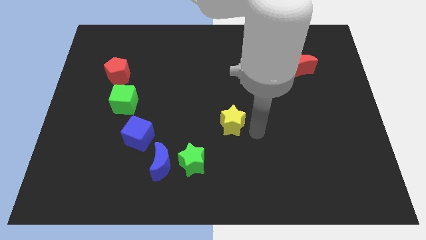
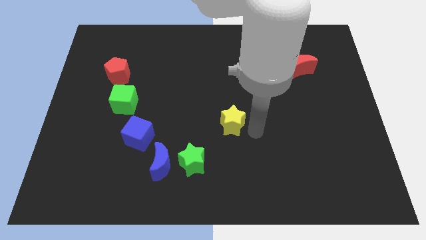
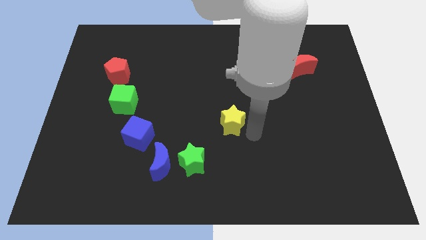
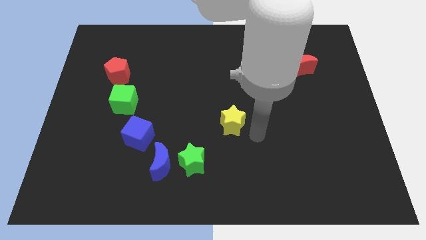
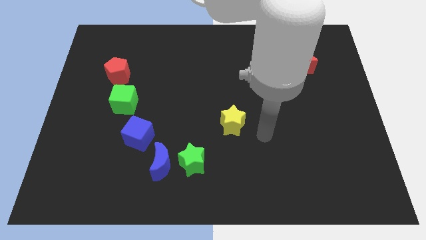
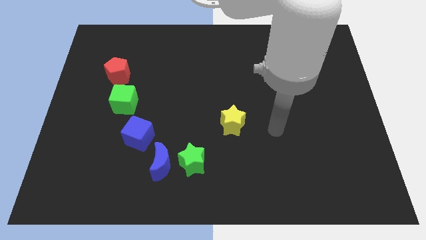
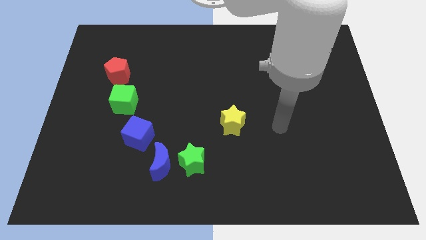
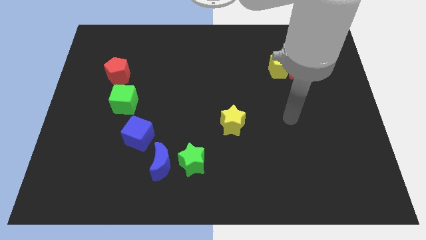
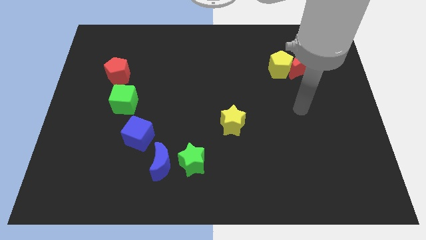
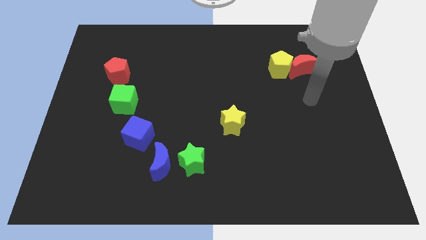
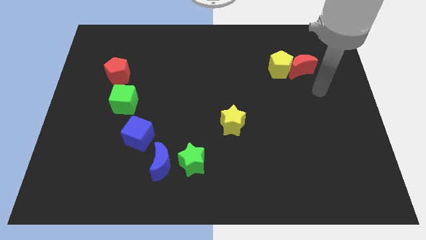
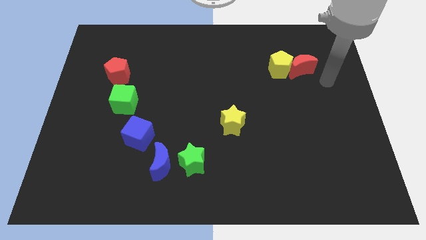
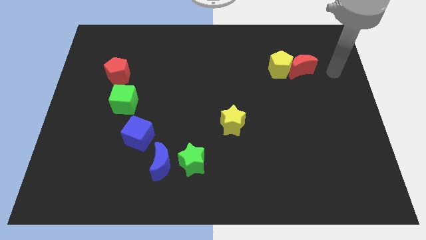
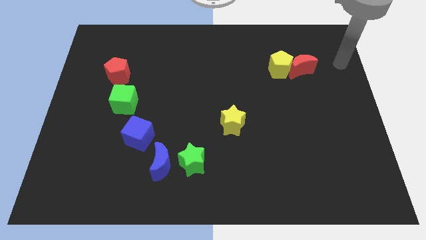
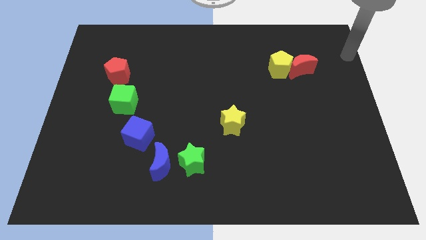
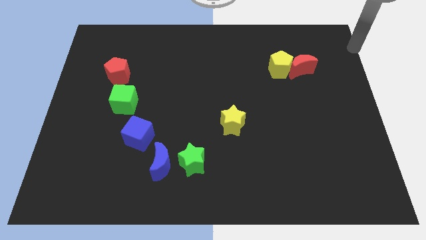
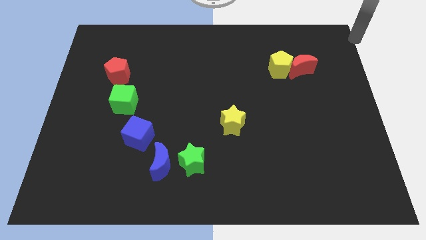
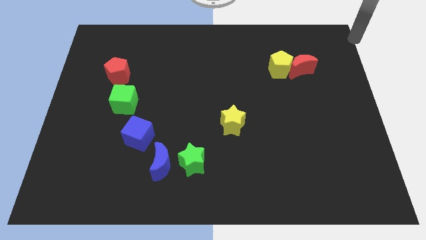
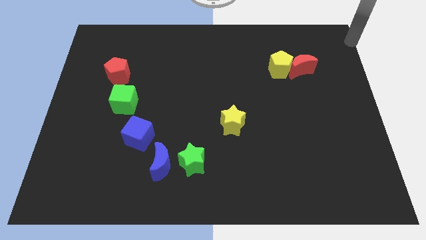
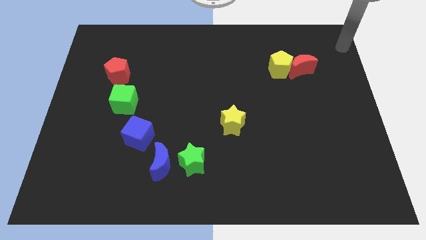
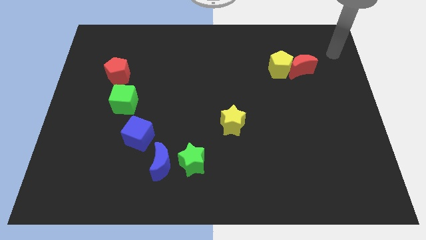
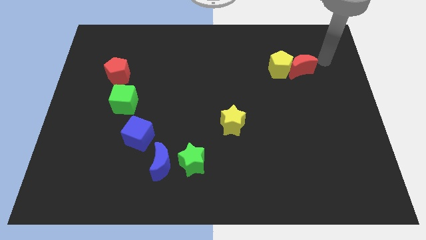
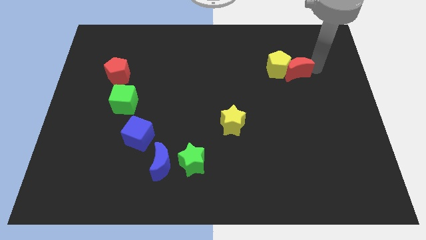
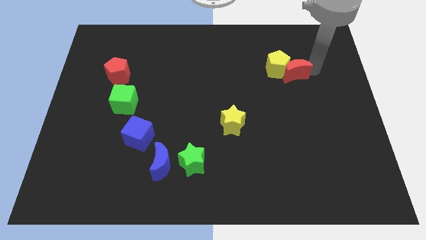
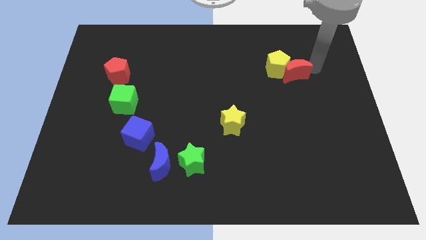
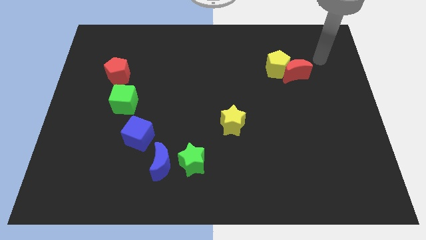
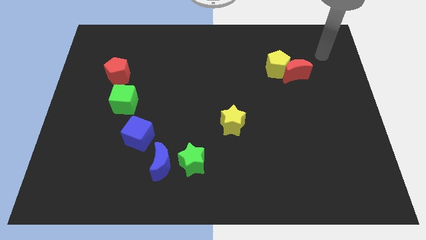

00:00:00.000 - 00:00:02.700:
push the red crescent slightly to the left

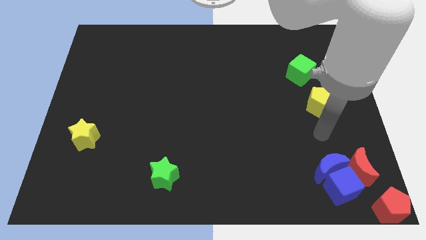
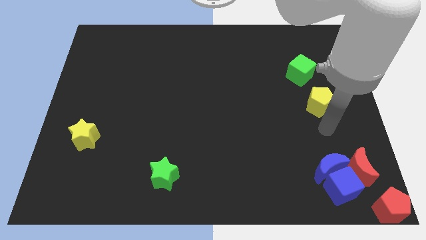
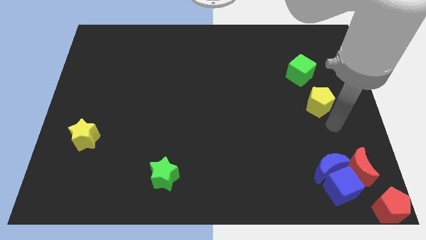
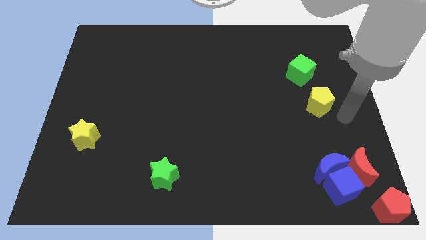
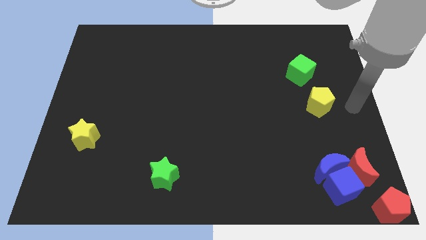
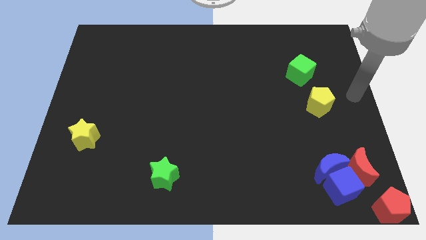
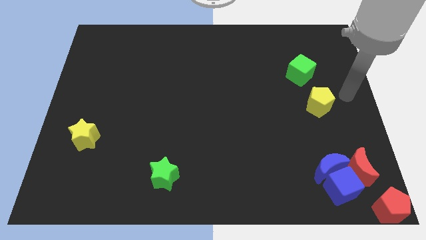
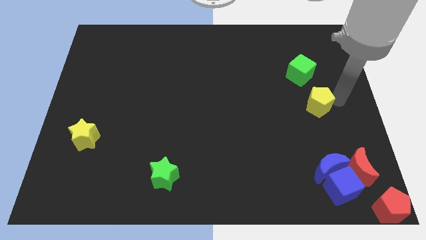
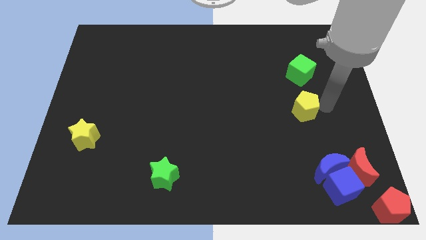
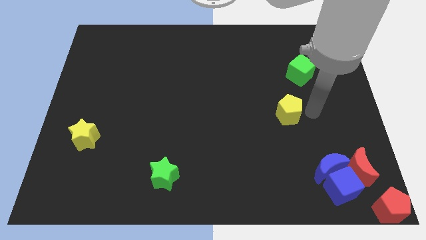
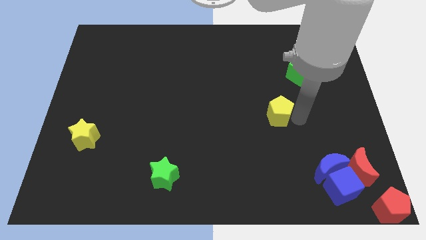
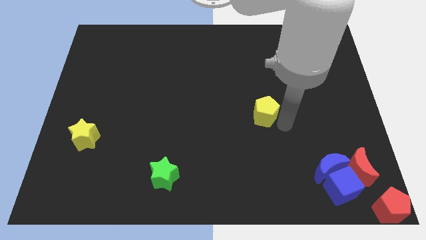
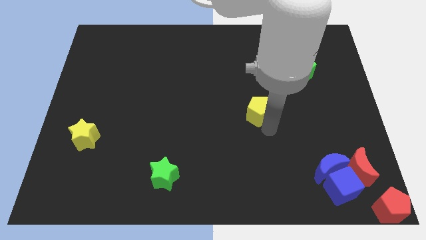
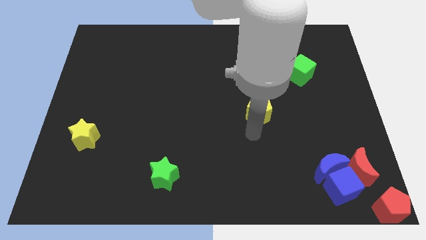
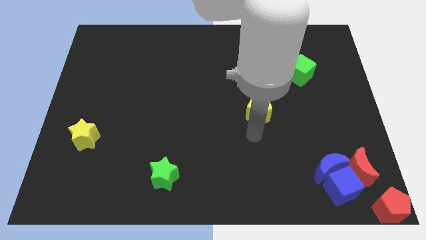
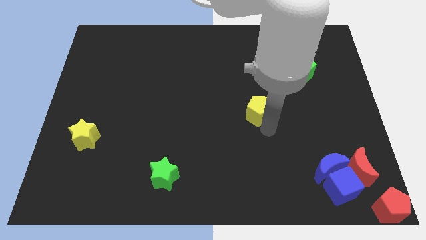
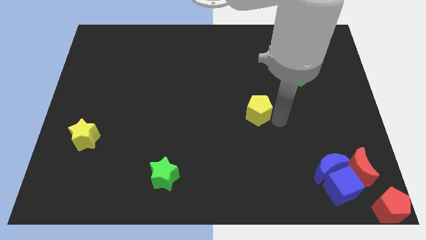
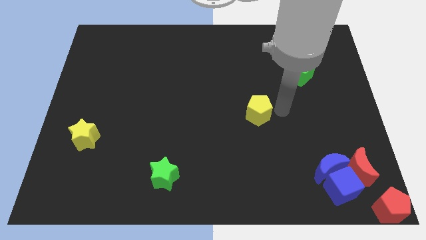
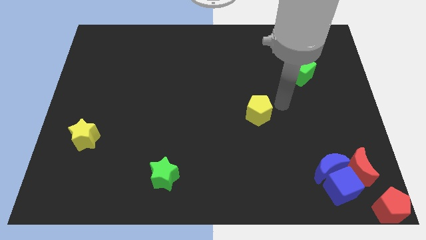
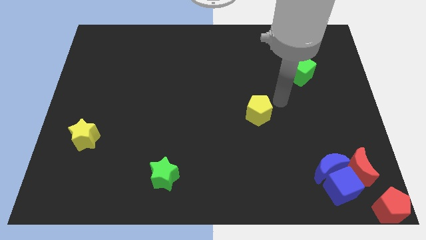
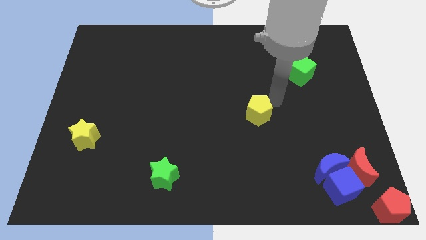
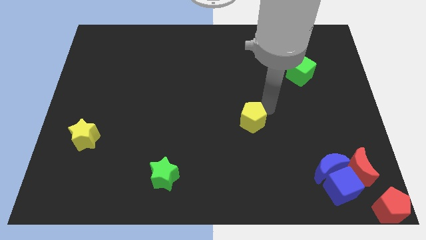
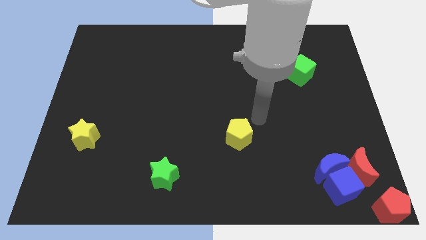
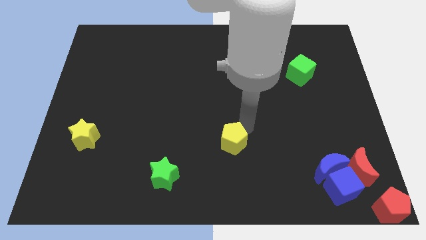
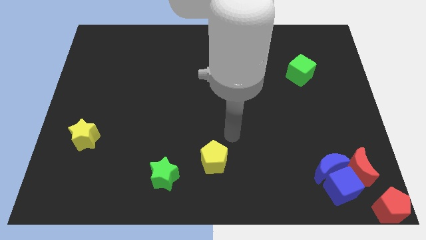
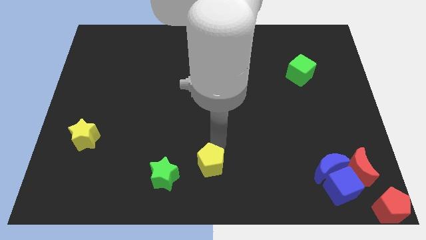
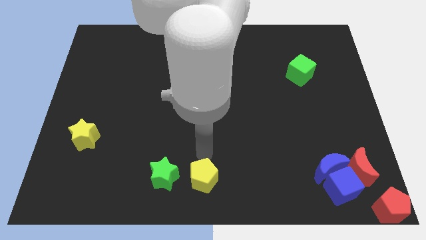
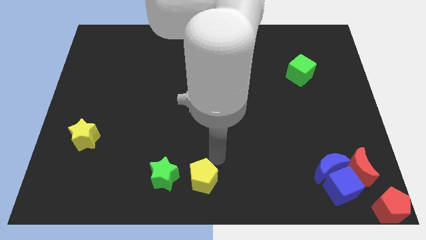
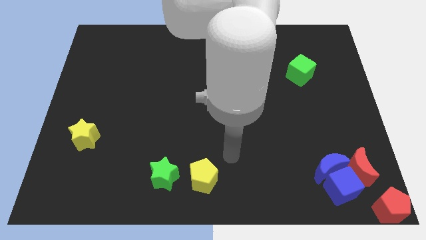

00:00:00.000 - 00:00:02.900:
place yellow pentagon parallel to green star

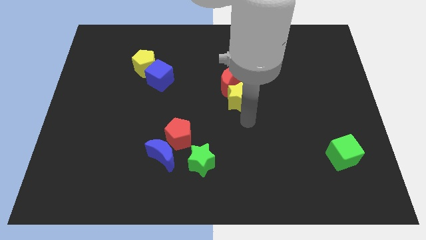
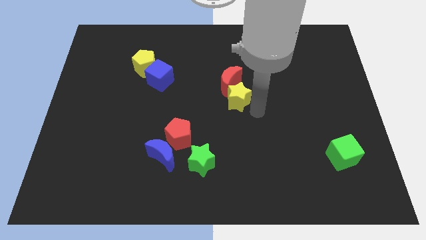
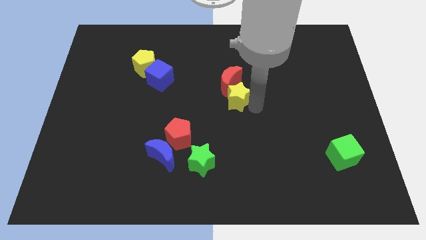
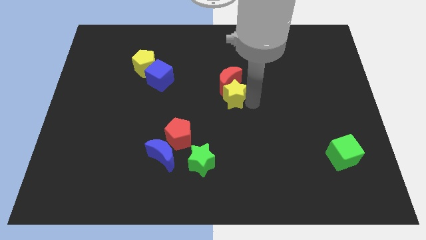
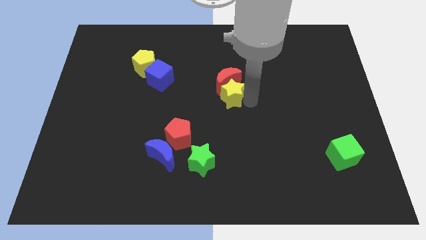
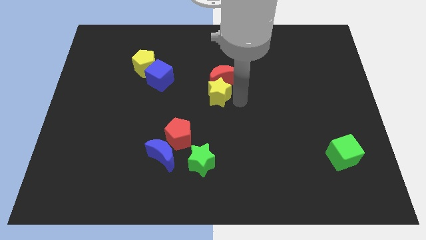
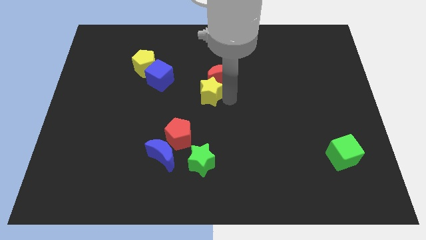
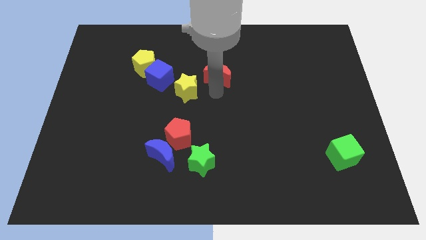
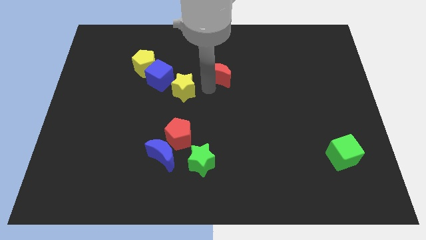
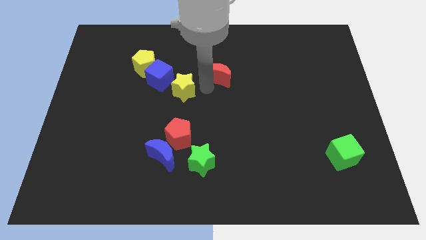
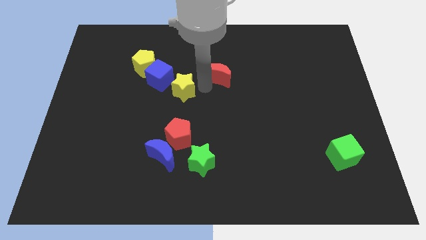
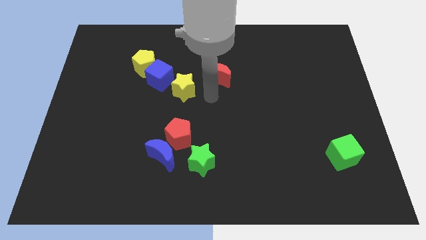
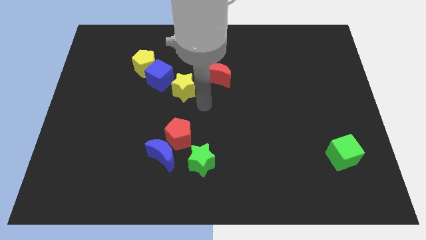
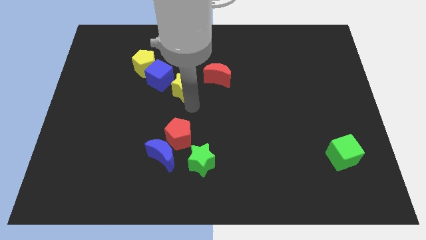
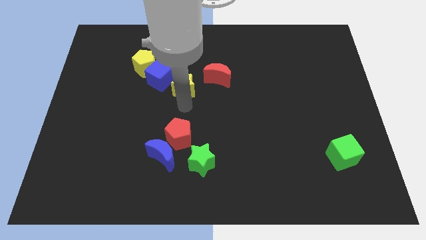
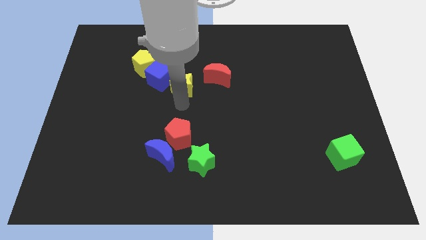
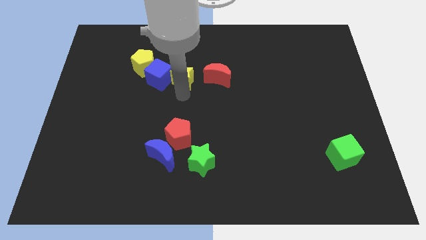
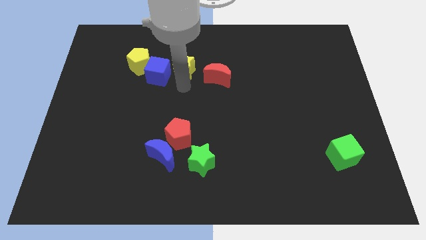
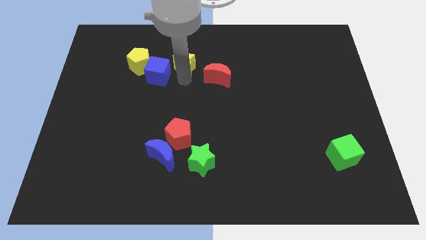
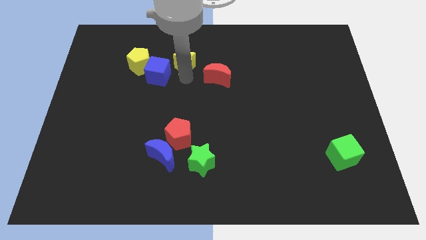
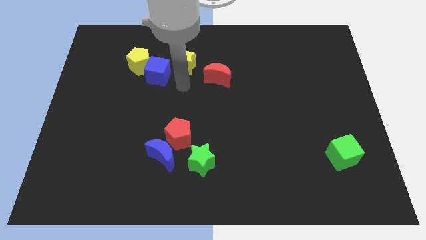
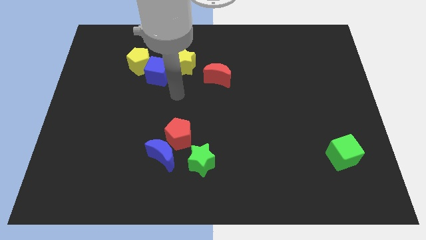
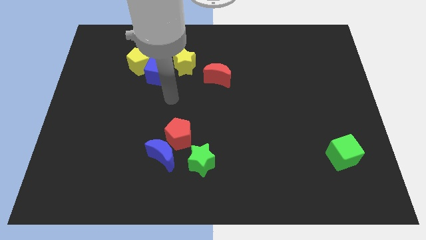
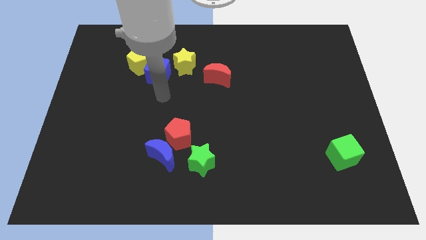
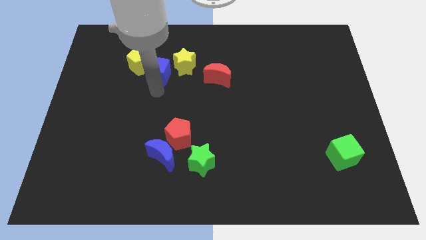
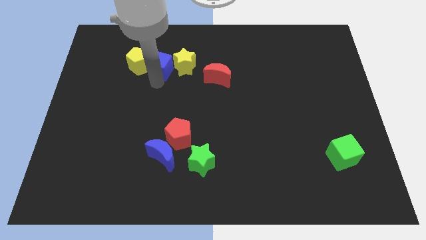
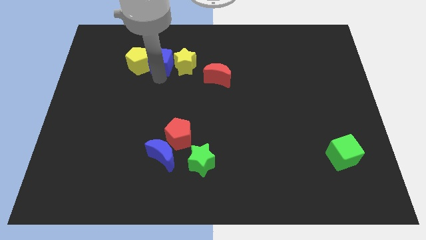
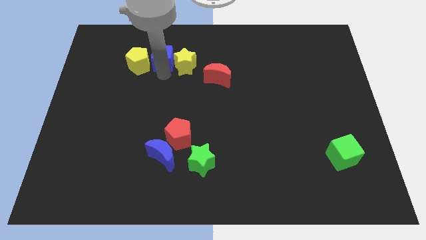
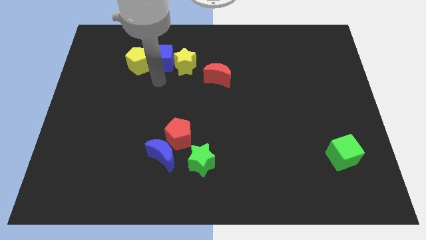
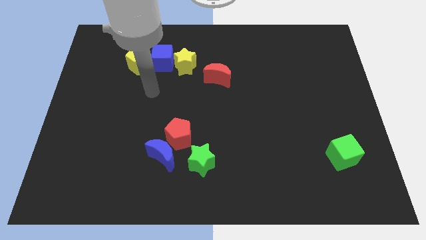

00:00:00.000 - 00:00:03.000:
put yellow star green cube on right side of yellow pentagon

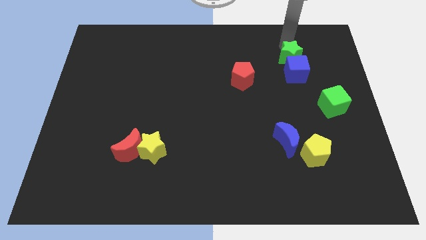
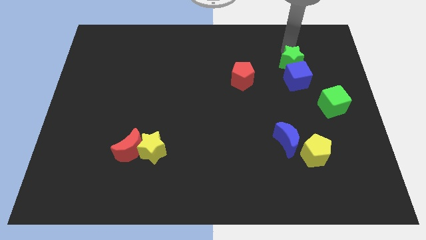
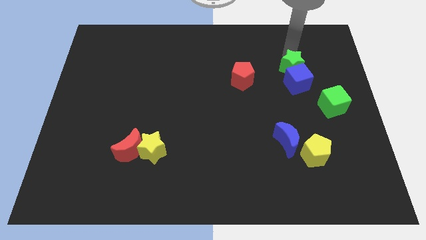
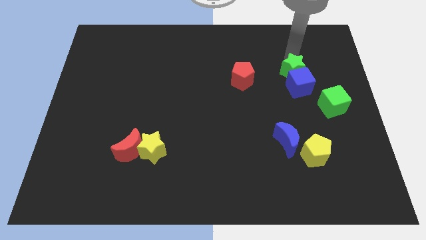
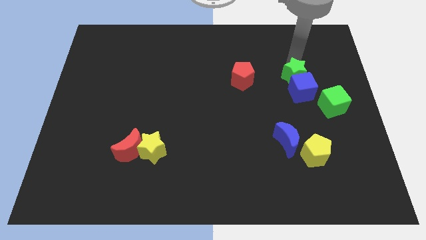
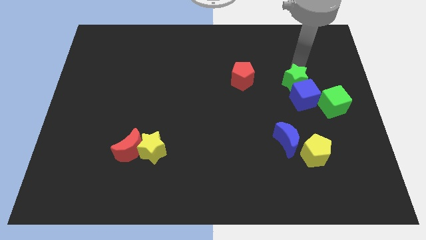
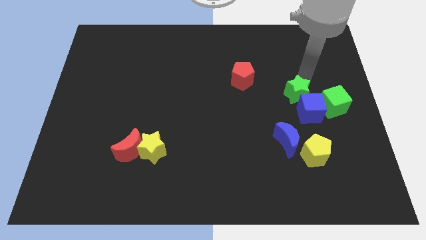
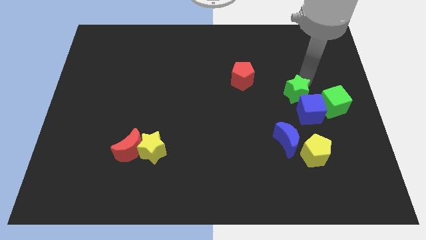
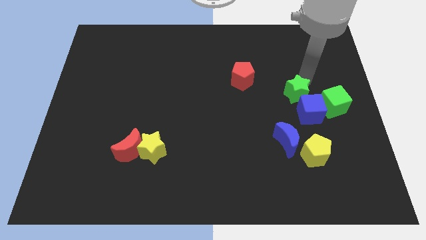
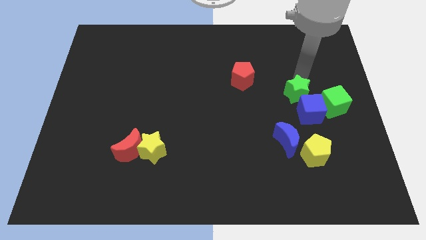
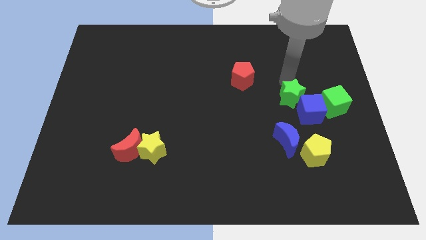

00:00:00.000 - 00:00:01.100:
push green star along with blue cube slightly down
